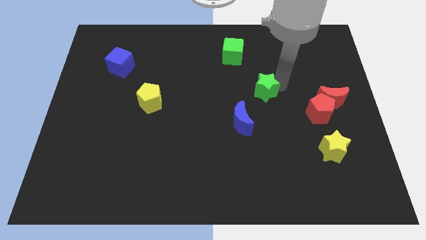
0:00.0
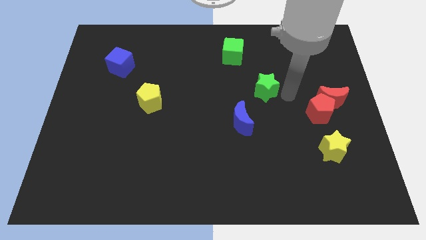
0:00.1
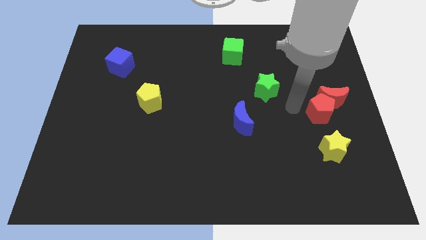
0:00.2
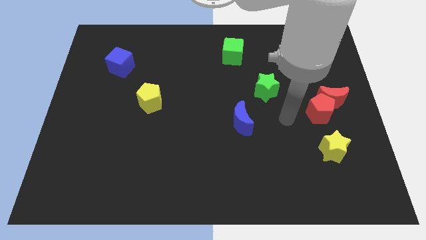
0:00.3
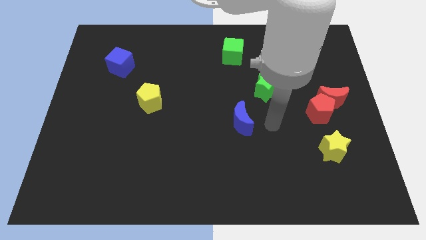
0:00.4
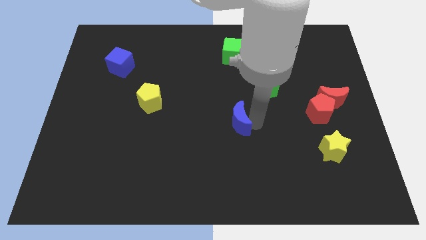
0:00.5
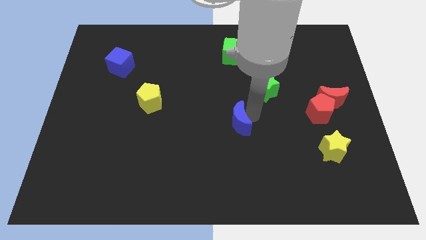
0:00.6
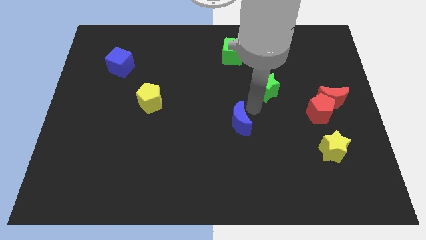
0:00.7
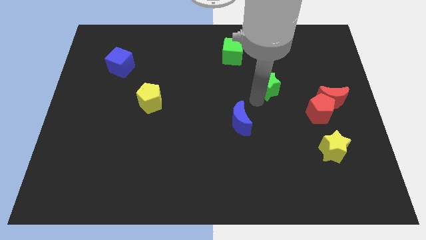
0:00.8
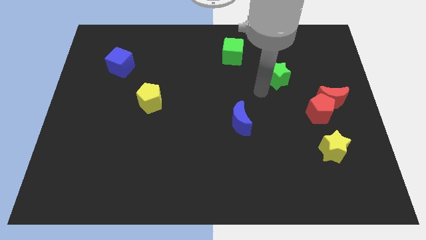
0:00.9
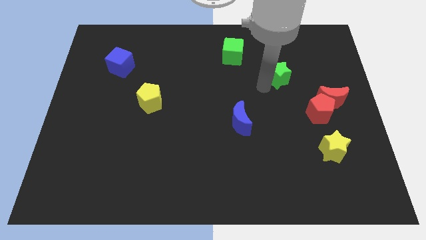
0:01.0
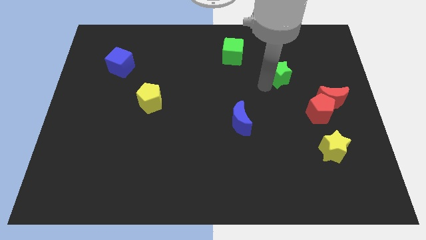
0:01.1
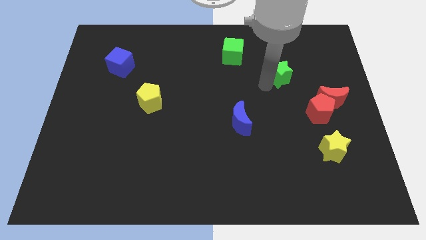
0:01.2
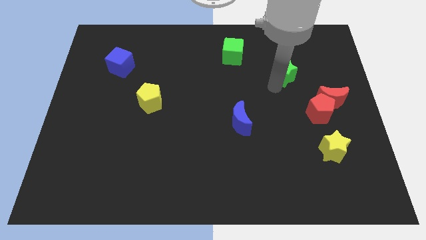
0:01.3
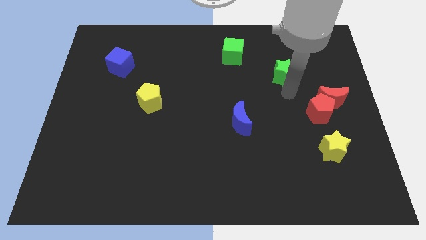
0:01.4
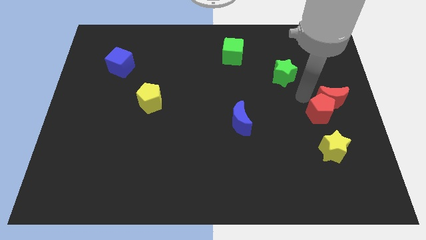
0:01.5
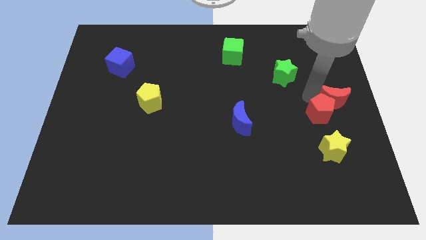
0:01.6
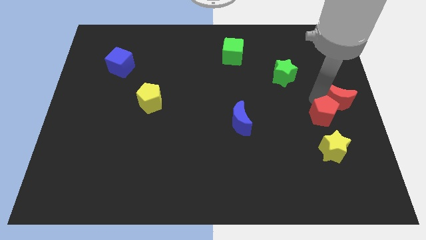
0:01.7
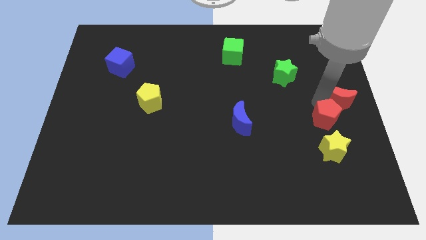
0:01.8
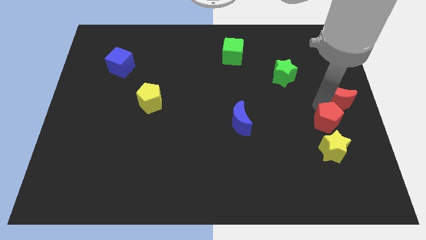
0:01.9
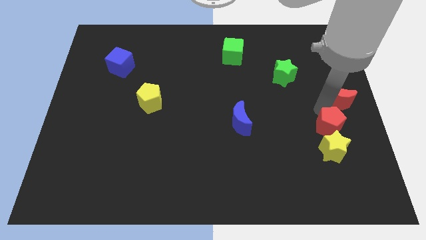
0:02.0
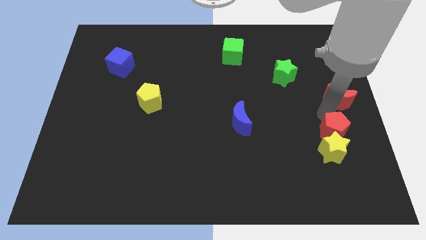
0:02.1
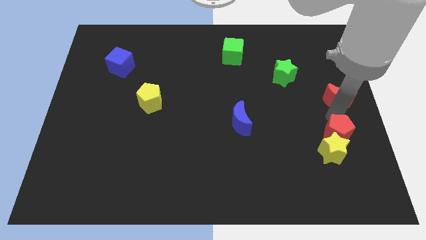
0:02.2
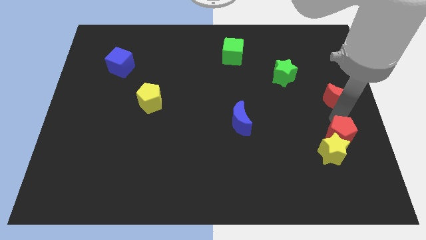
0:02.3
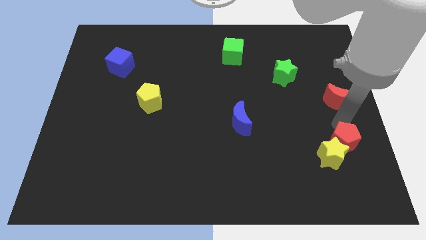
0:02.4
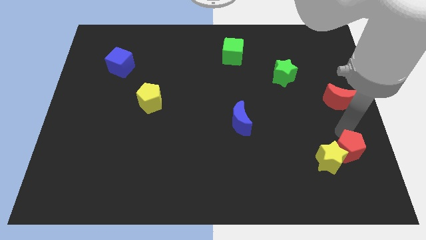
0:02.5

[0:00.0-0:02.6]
separate the red pentagon from red moon

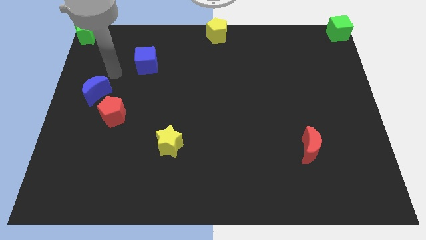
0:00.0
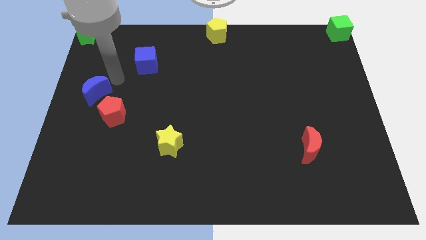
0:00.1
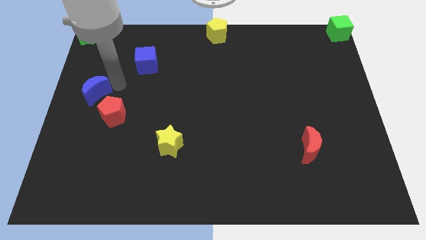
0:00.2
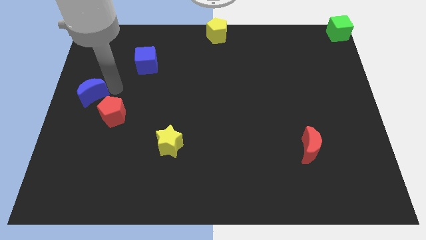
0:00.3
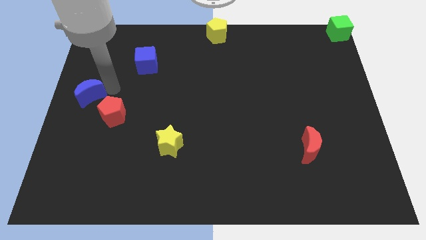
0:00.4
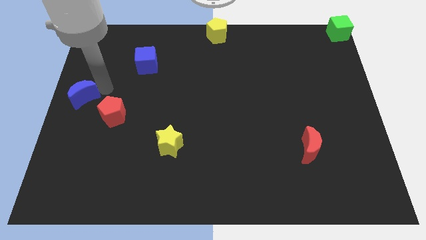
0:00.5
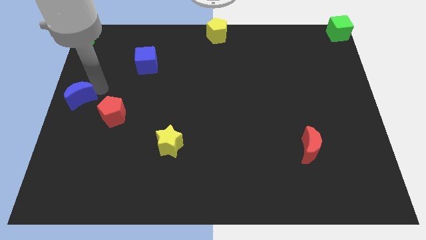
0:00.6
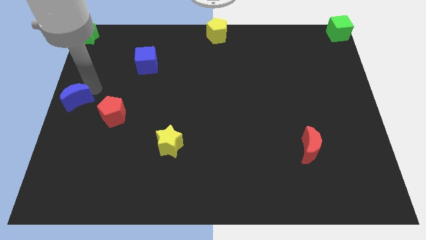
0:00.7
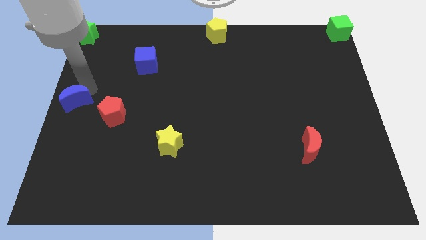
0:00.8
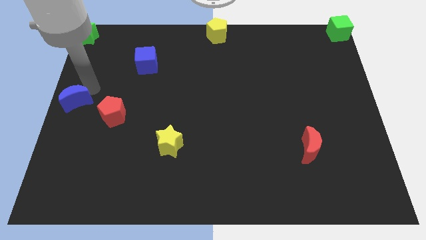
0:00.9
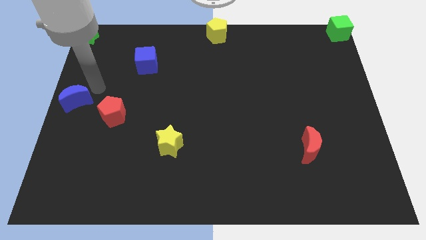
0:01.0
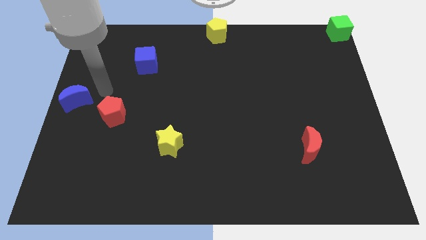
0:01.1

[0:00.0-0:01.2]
move the blue cube to the left center of the board

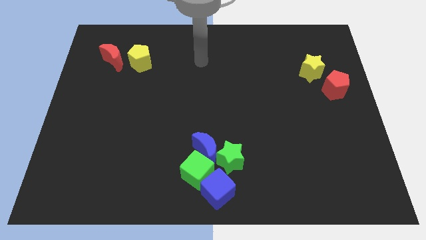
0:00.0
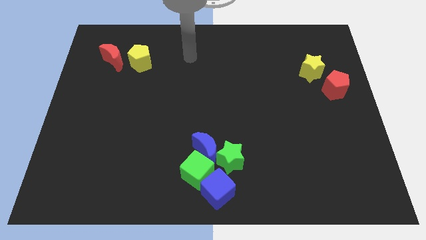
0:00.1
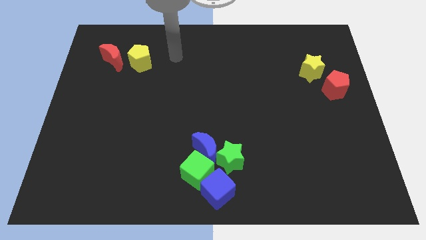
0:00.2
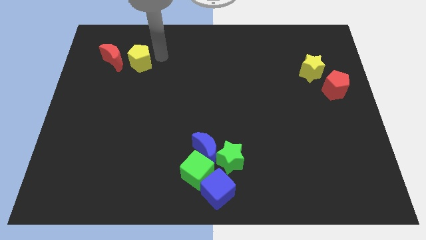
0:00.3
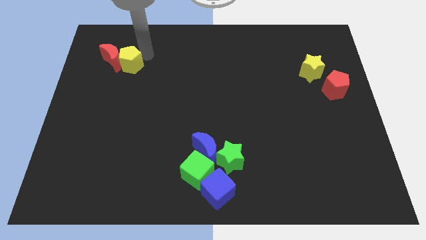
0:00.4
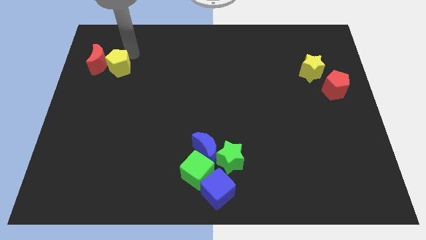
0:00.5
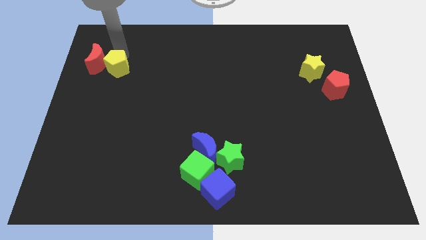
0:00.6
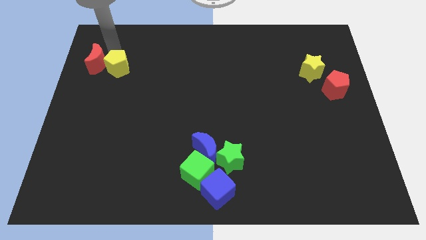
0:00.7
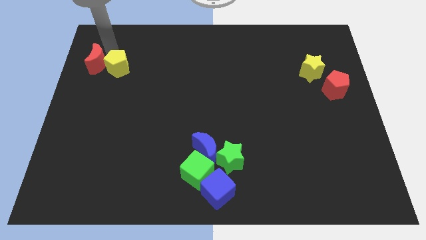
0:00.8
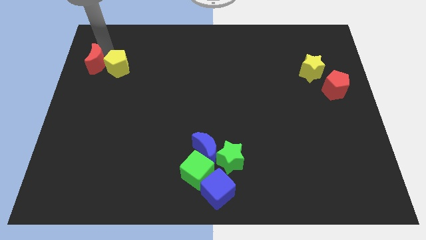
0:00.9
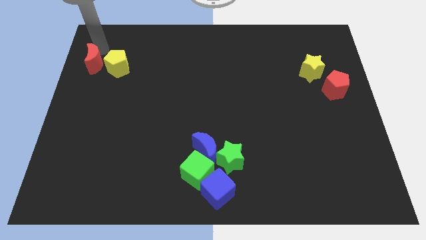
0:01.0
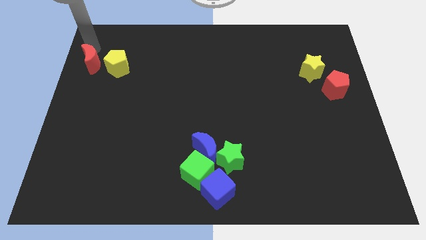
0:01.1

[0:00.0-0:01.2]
move the yellow pentagon into red crescent

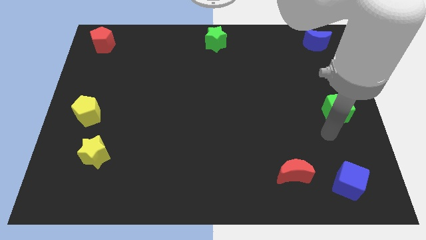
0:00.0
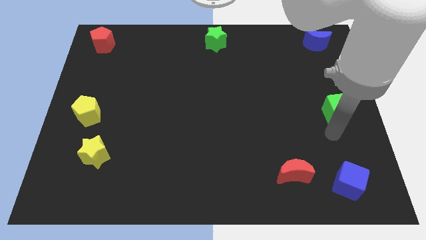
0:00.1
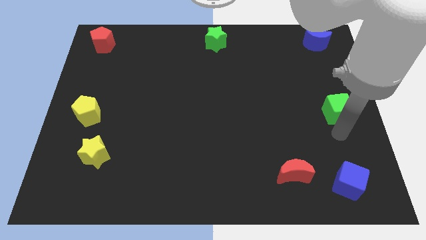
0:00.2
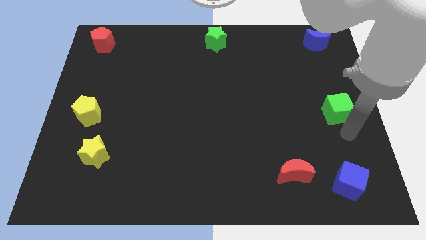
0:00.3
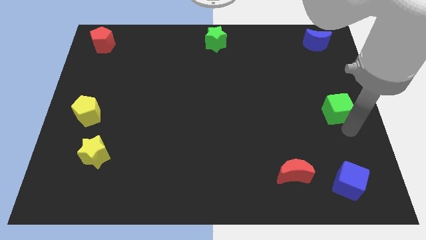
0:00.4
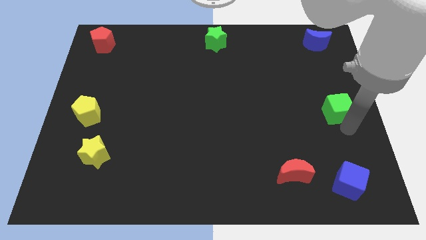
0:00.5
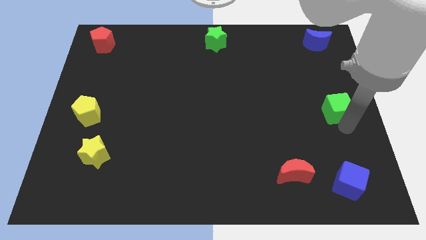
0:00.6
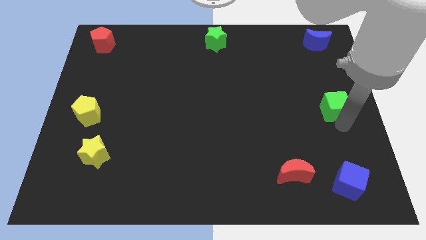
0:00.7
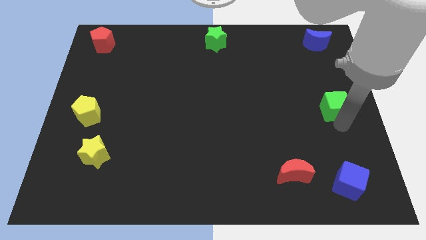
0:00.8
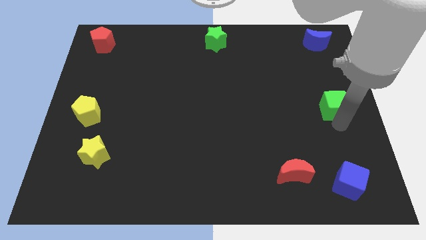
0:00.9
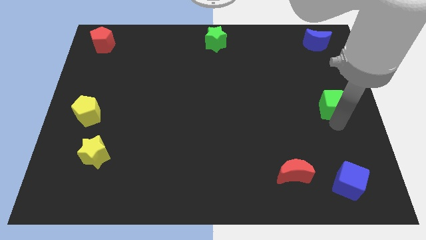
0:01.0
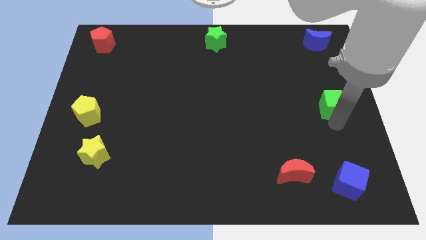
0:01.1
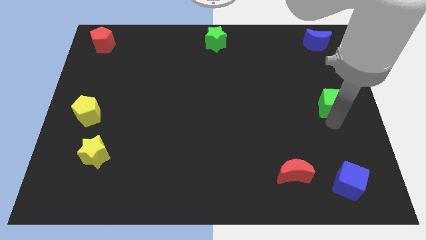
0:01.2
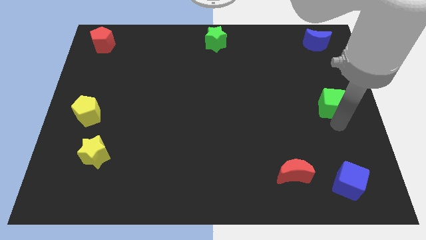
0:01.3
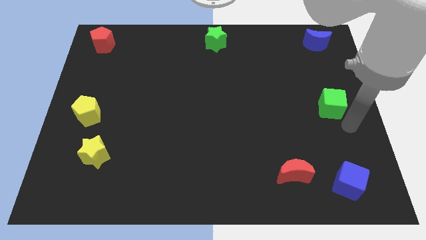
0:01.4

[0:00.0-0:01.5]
move the green square to the right side center of the board

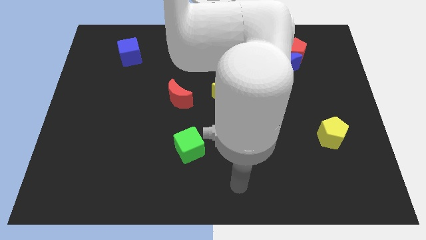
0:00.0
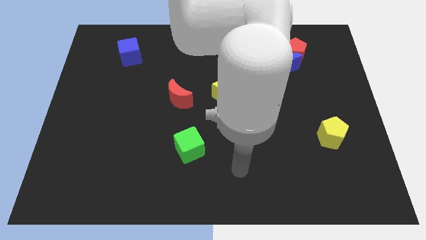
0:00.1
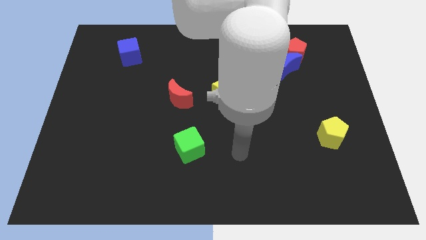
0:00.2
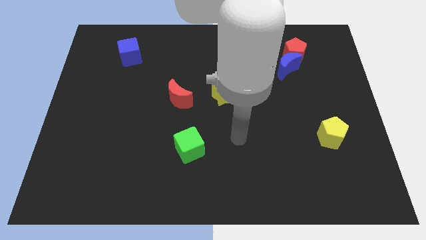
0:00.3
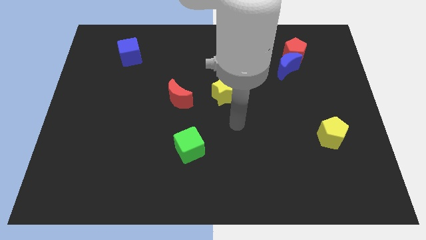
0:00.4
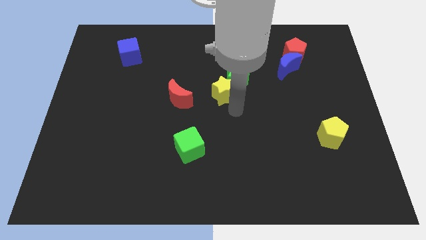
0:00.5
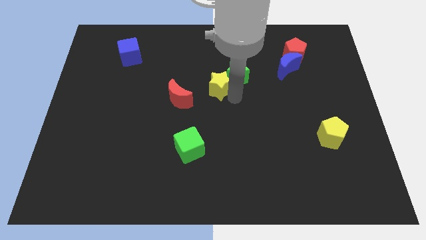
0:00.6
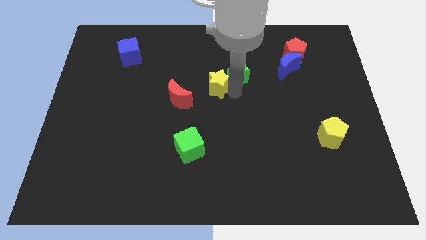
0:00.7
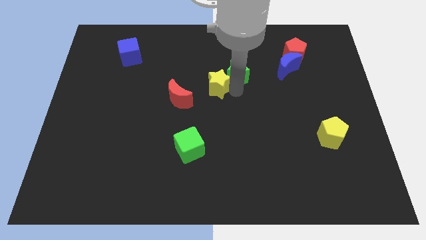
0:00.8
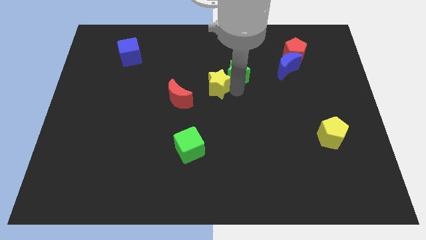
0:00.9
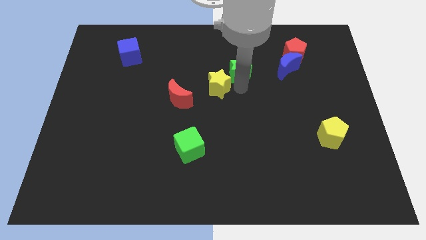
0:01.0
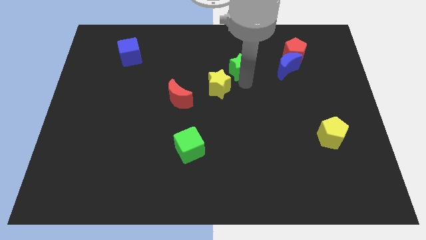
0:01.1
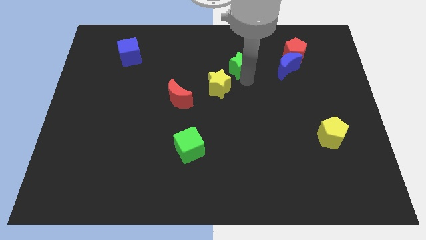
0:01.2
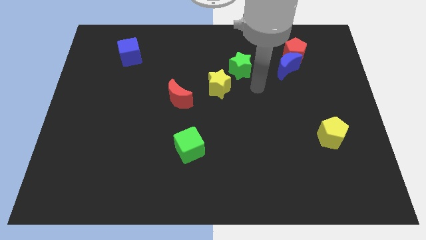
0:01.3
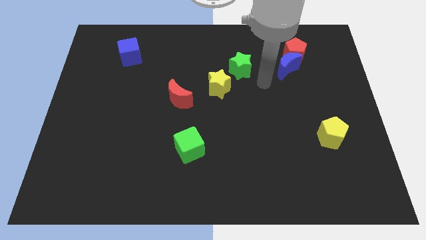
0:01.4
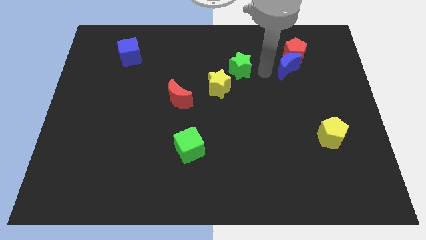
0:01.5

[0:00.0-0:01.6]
move the yellow star slightly towards the green star

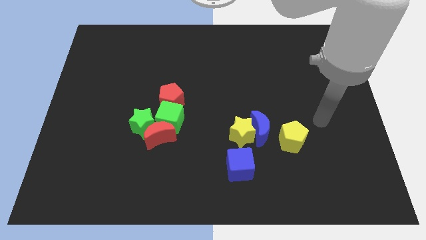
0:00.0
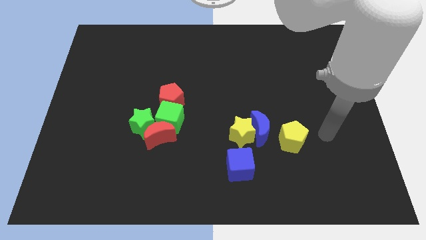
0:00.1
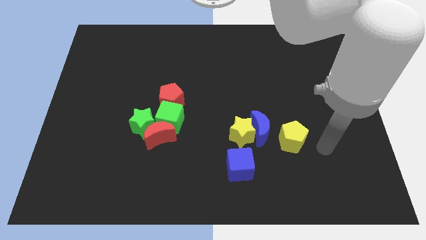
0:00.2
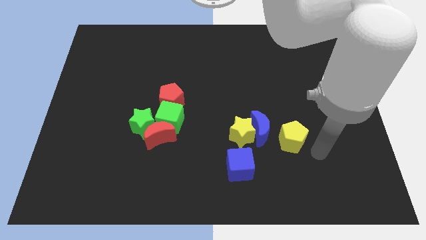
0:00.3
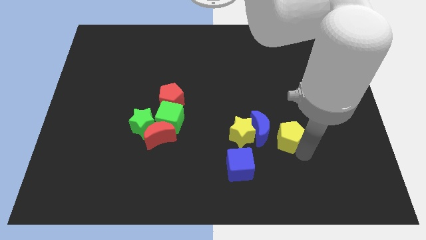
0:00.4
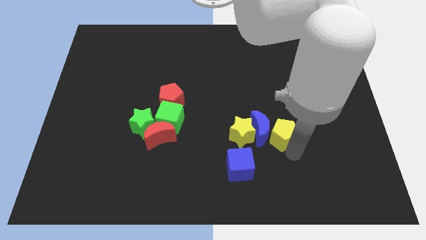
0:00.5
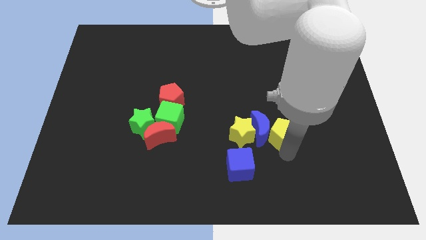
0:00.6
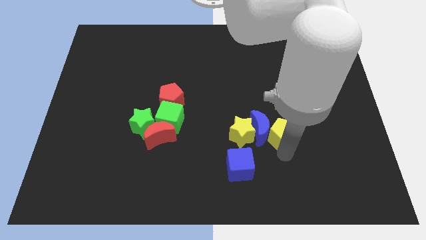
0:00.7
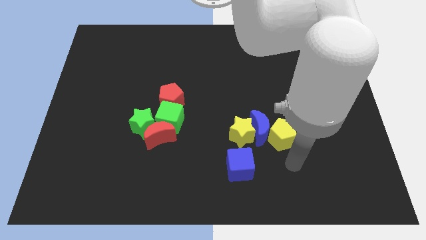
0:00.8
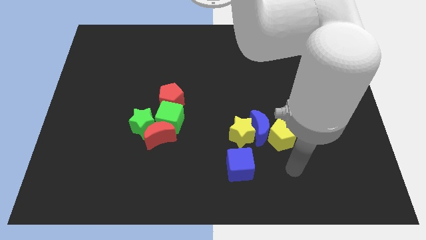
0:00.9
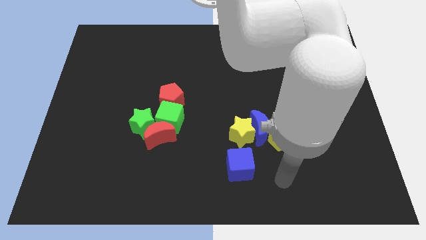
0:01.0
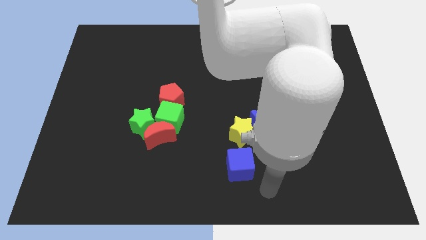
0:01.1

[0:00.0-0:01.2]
slide yellow pentagon into blue moon
